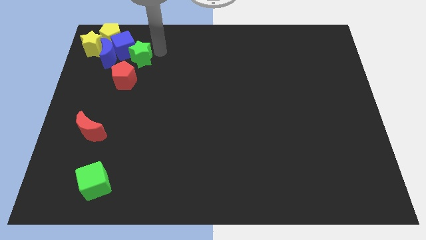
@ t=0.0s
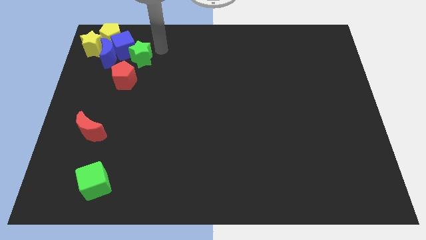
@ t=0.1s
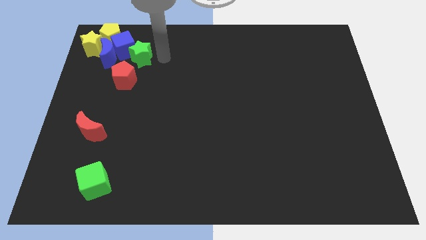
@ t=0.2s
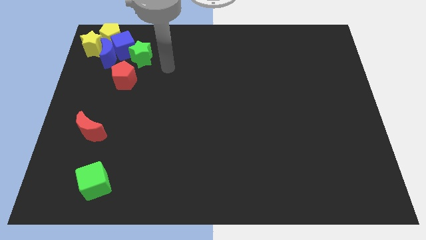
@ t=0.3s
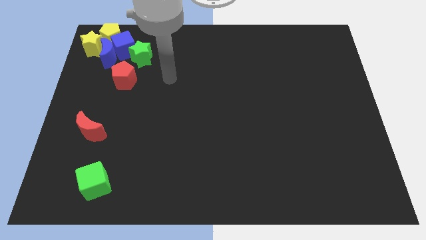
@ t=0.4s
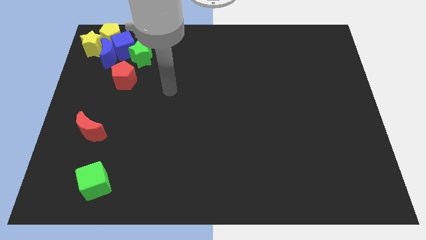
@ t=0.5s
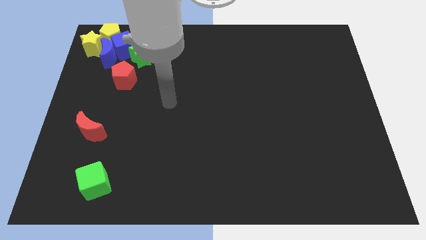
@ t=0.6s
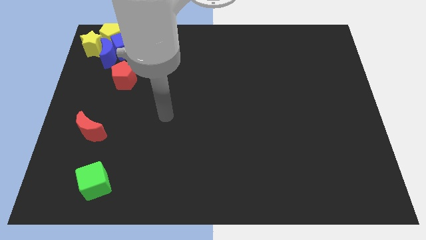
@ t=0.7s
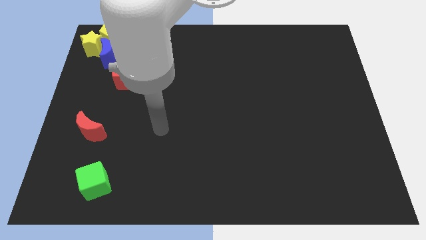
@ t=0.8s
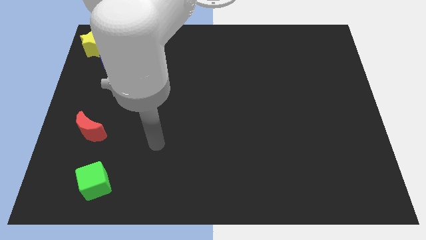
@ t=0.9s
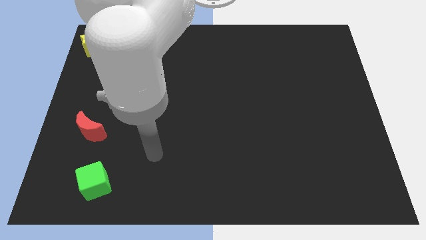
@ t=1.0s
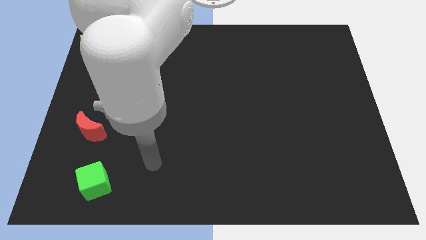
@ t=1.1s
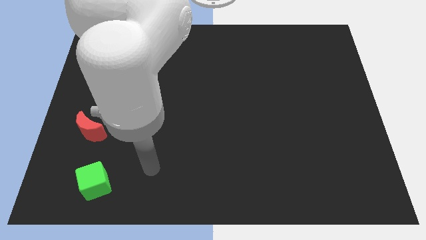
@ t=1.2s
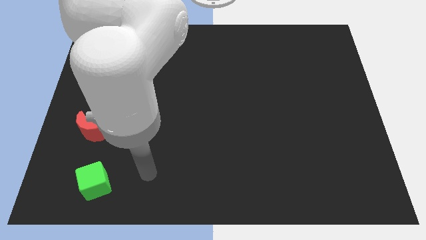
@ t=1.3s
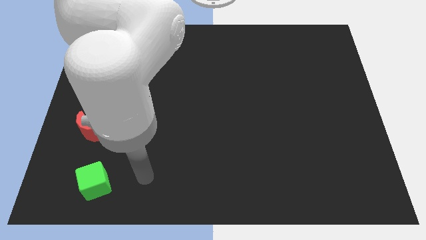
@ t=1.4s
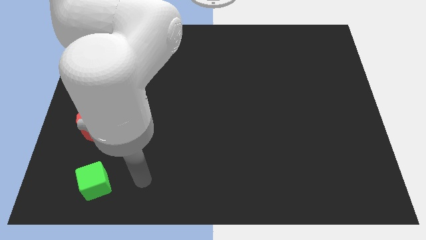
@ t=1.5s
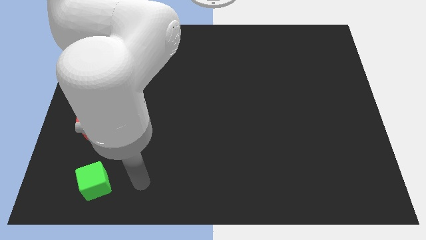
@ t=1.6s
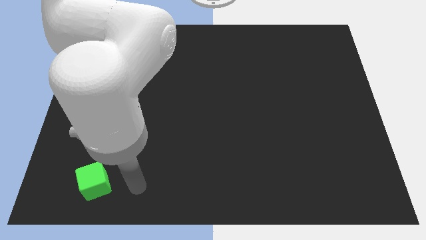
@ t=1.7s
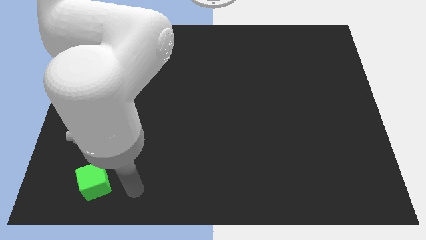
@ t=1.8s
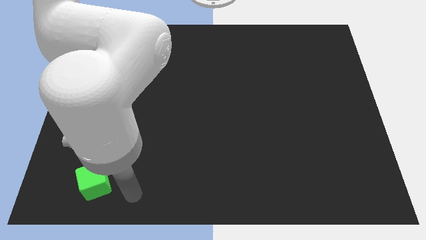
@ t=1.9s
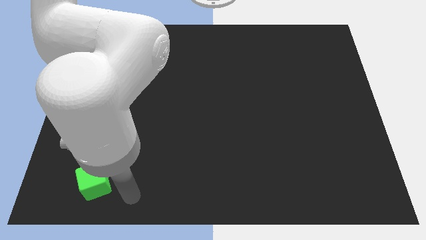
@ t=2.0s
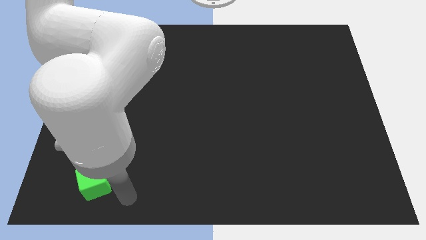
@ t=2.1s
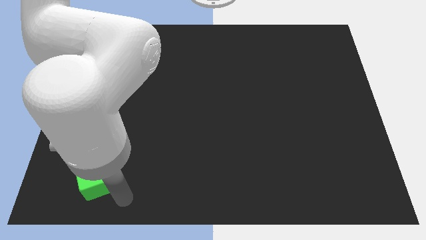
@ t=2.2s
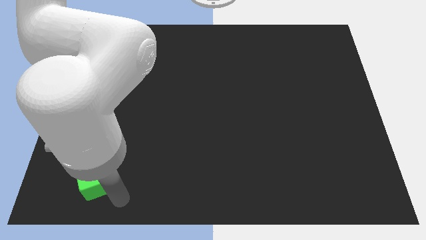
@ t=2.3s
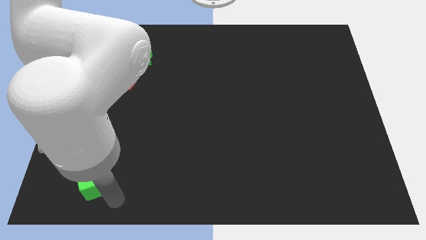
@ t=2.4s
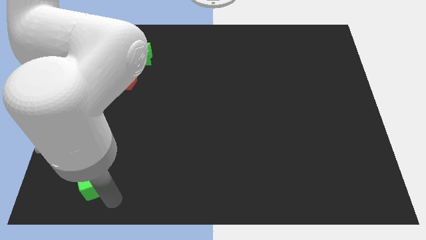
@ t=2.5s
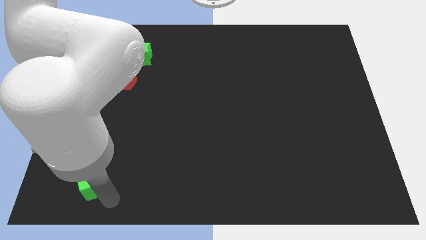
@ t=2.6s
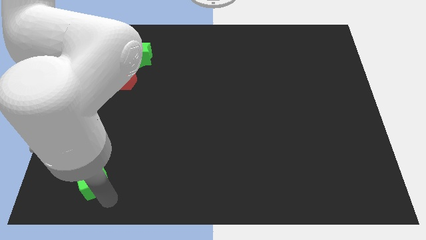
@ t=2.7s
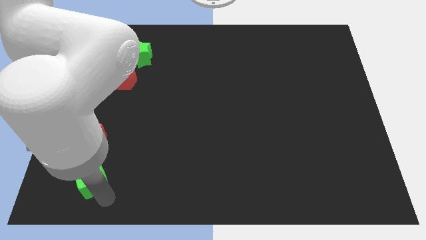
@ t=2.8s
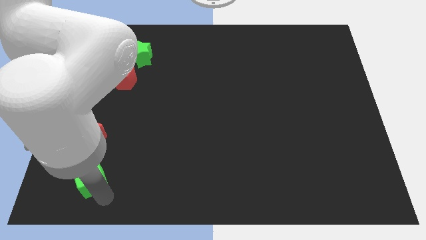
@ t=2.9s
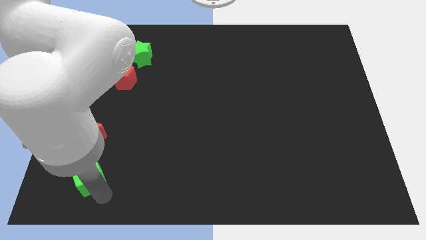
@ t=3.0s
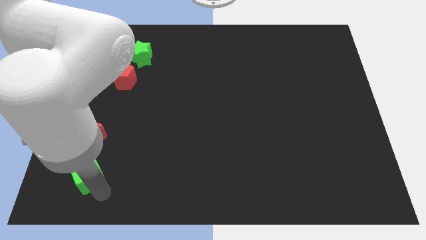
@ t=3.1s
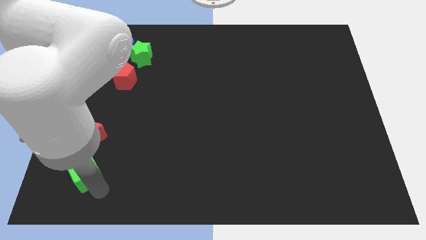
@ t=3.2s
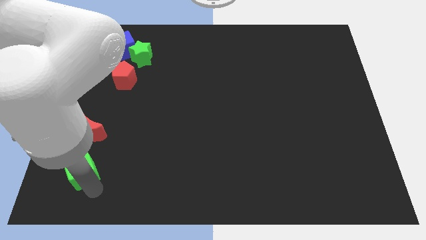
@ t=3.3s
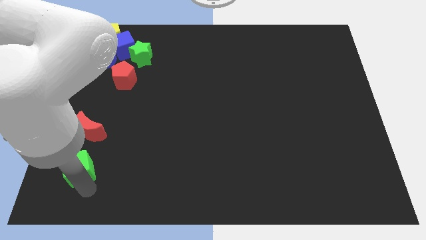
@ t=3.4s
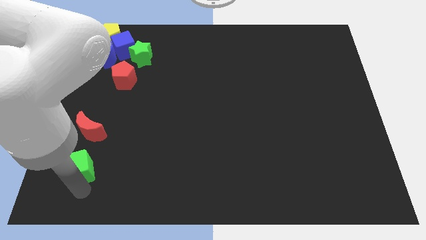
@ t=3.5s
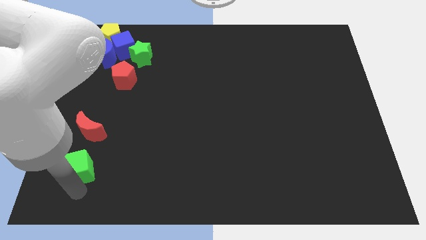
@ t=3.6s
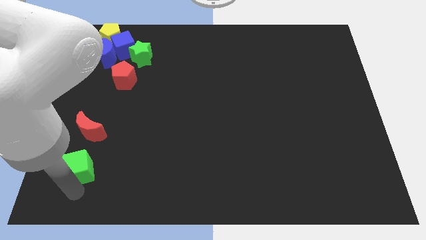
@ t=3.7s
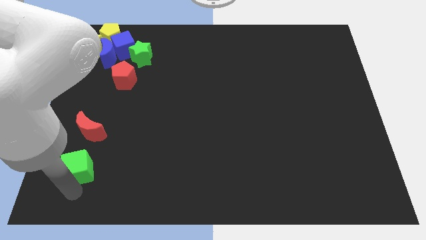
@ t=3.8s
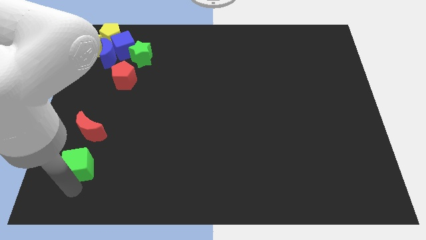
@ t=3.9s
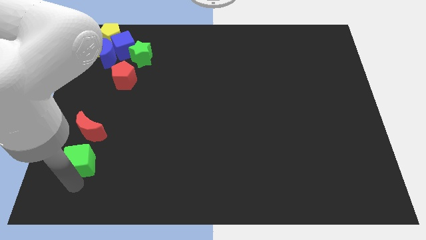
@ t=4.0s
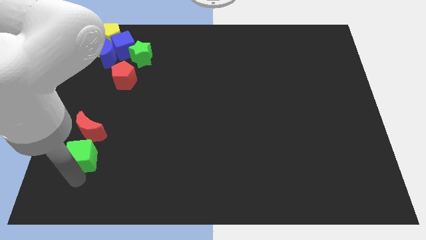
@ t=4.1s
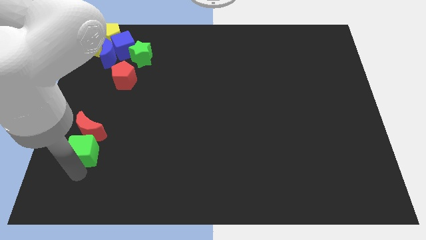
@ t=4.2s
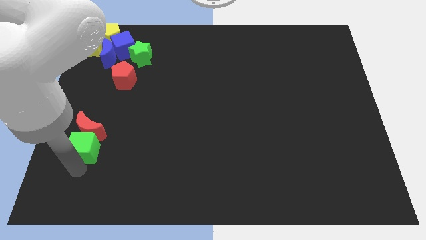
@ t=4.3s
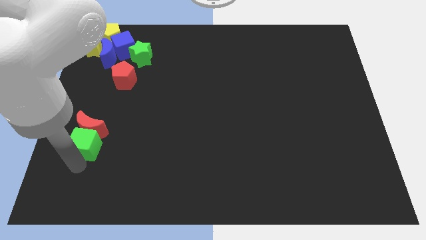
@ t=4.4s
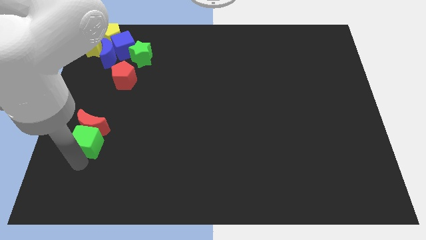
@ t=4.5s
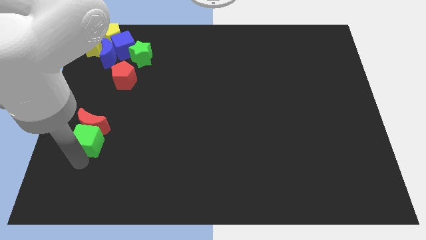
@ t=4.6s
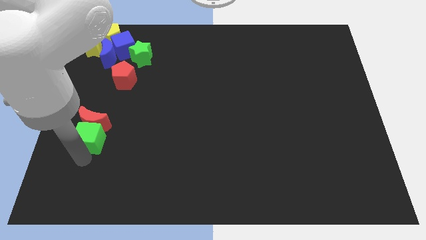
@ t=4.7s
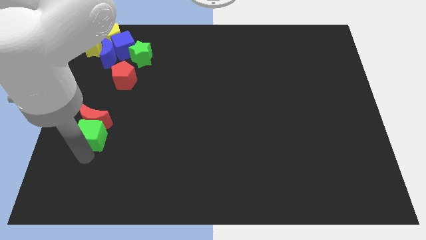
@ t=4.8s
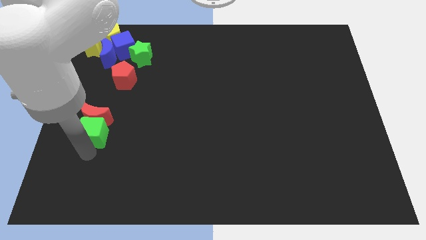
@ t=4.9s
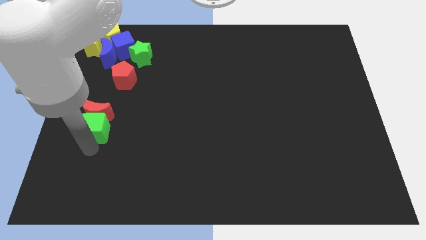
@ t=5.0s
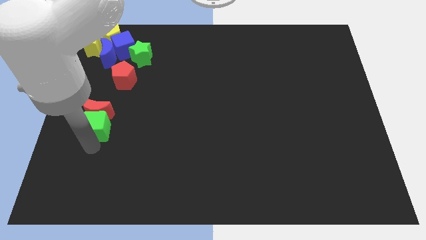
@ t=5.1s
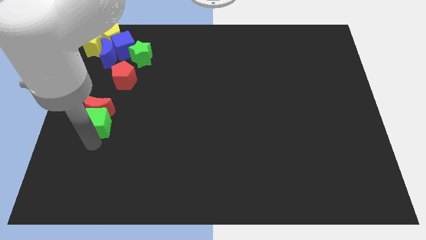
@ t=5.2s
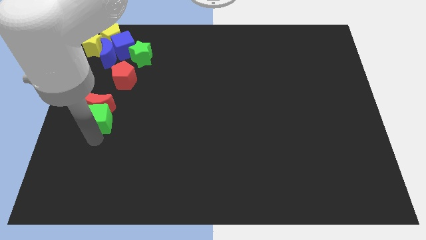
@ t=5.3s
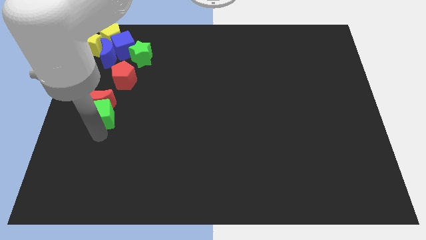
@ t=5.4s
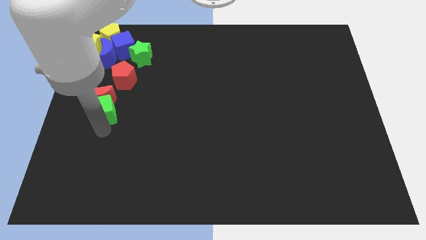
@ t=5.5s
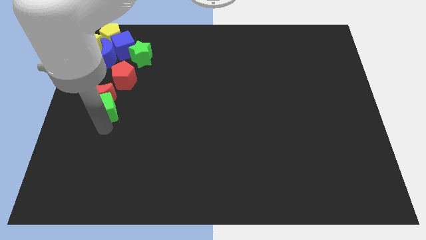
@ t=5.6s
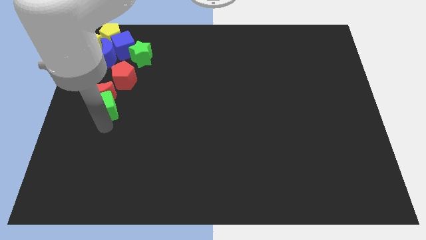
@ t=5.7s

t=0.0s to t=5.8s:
push the green cube into the red moon

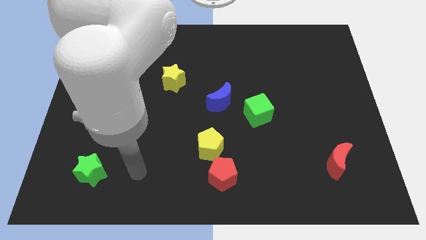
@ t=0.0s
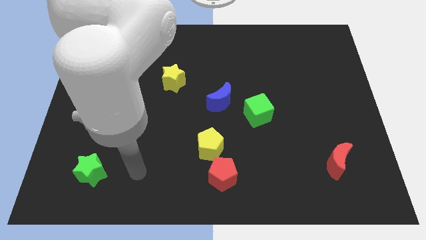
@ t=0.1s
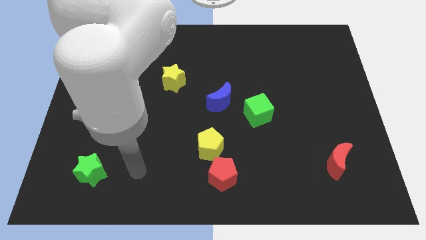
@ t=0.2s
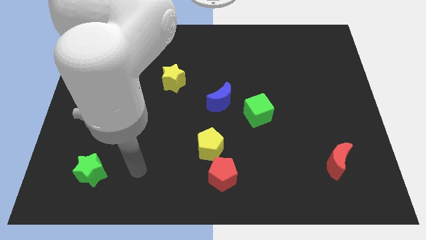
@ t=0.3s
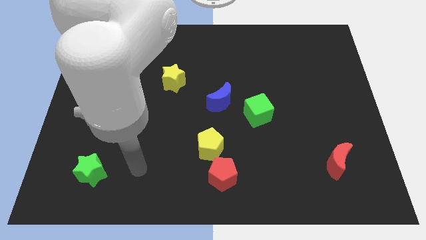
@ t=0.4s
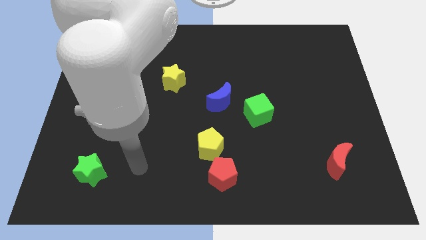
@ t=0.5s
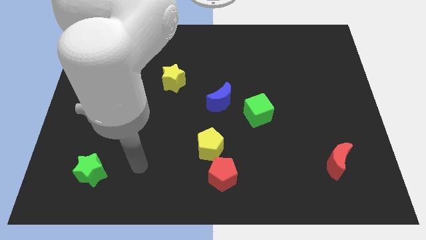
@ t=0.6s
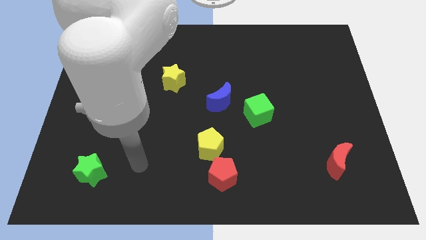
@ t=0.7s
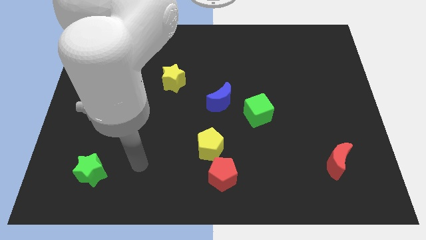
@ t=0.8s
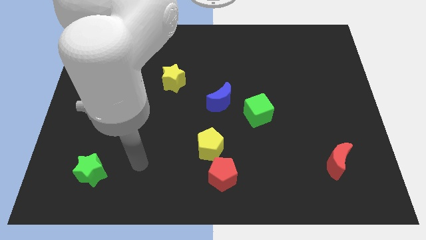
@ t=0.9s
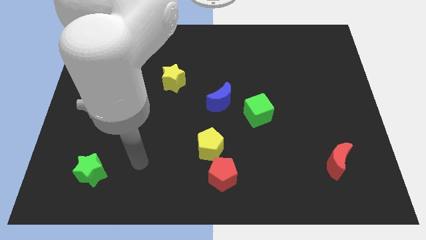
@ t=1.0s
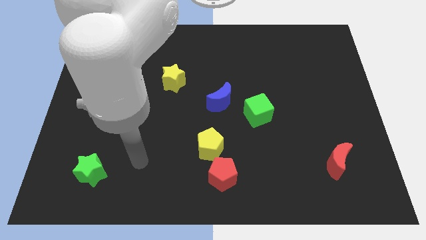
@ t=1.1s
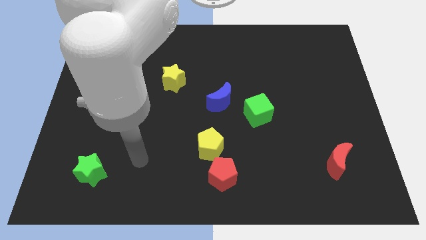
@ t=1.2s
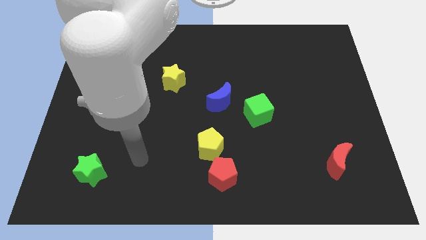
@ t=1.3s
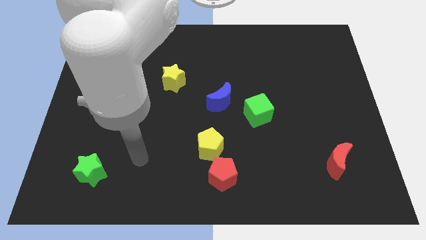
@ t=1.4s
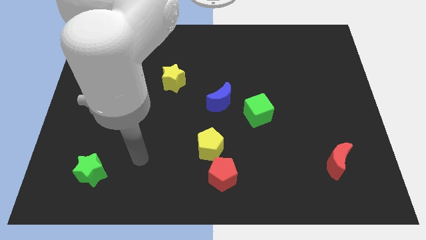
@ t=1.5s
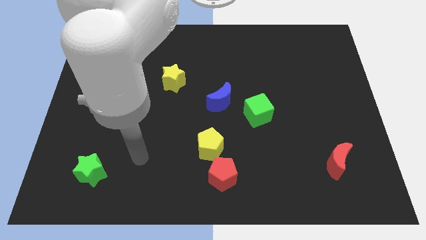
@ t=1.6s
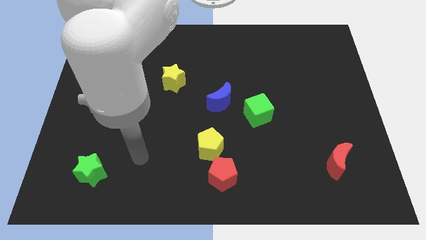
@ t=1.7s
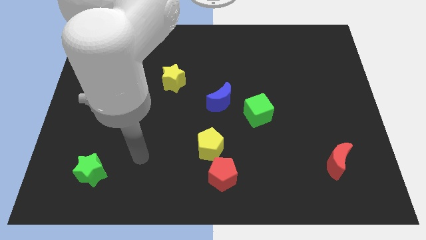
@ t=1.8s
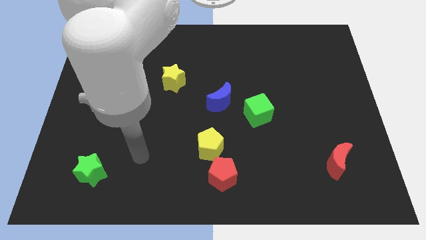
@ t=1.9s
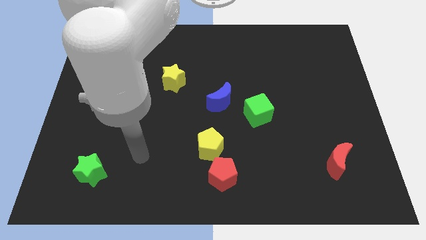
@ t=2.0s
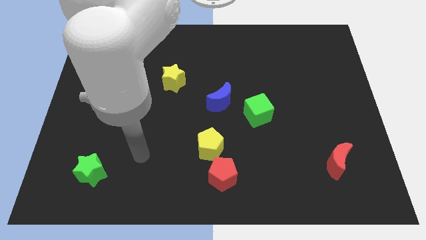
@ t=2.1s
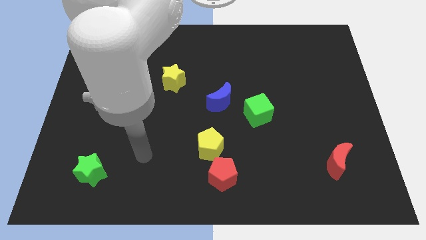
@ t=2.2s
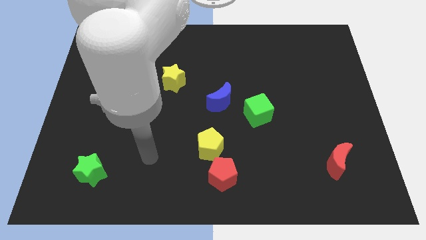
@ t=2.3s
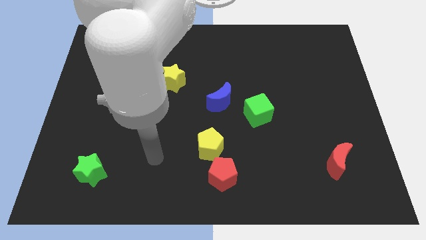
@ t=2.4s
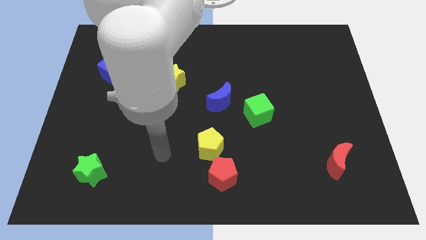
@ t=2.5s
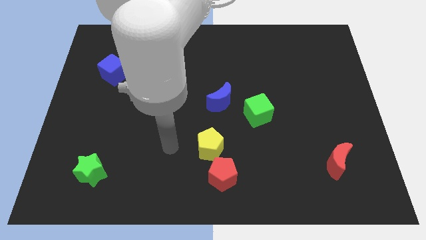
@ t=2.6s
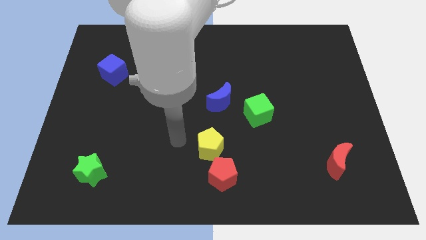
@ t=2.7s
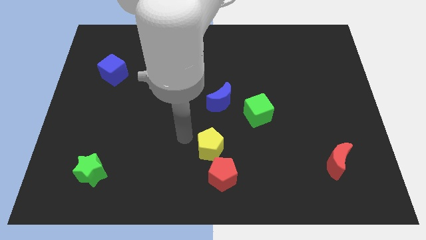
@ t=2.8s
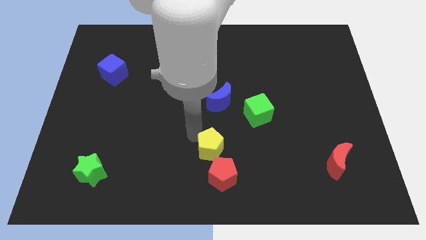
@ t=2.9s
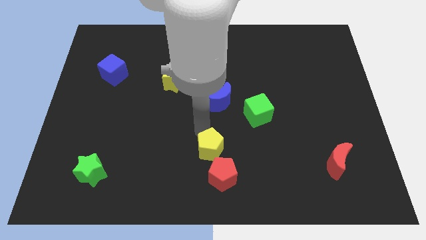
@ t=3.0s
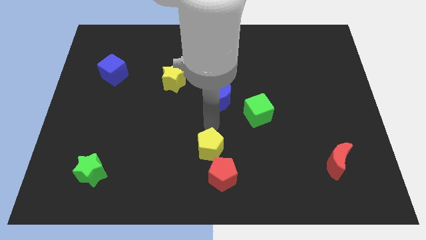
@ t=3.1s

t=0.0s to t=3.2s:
move your arm towards the yellow pentagon
